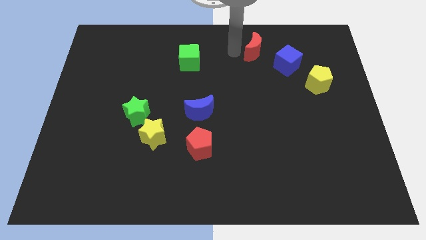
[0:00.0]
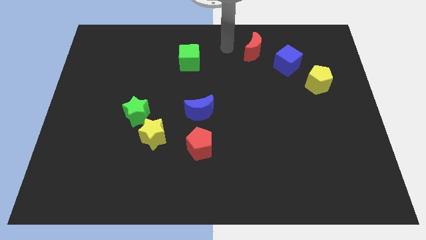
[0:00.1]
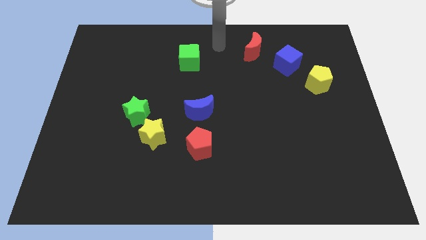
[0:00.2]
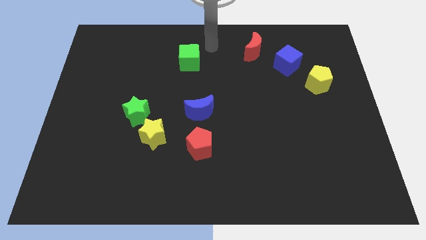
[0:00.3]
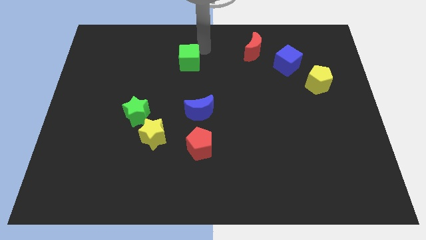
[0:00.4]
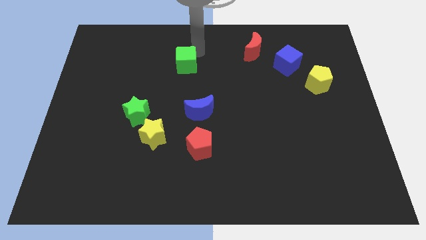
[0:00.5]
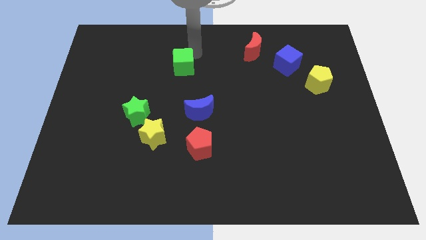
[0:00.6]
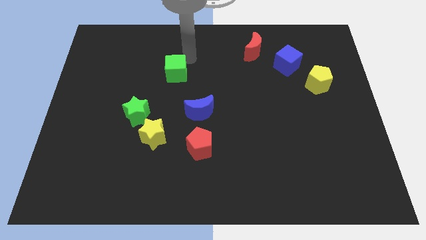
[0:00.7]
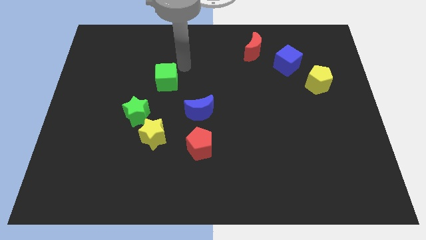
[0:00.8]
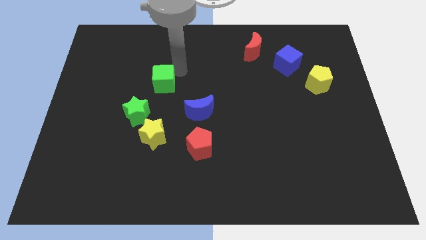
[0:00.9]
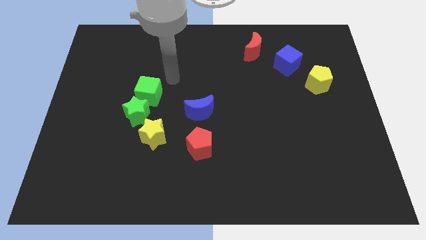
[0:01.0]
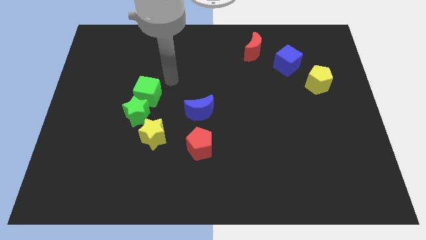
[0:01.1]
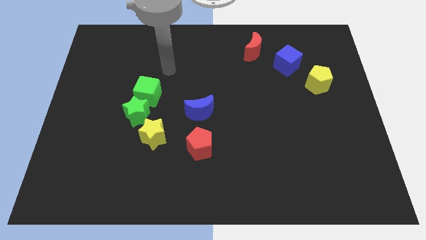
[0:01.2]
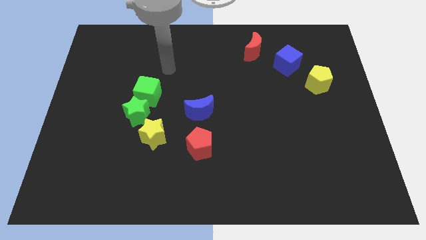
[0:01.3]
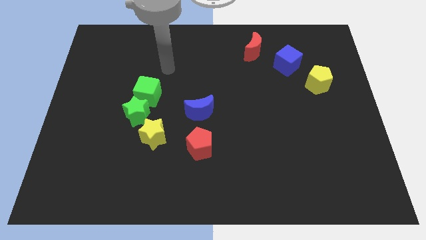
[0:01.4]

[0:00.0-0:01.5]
push the green cube into the green star

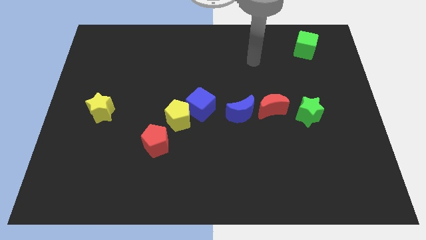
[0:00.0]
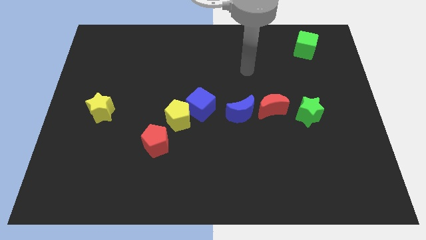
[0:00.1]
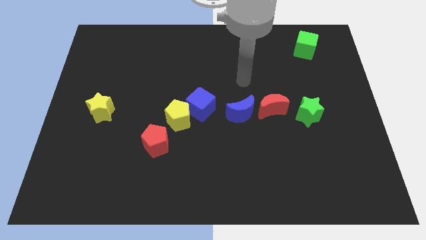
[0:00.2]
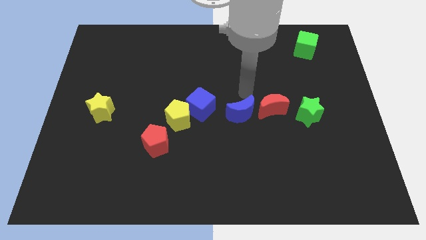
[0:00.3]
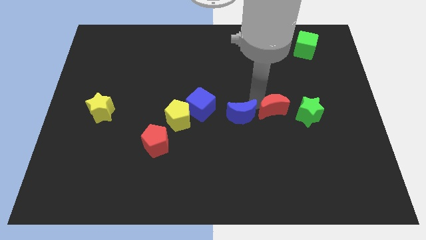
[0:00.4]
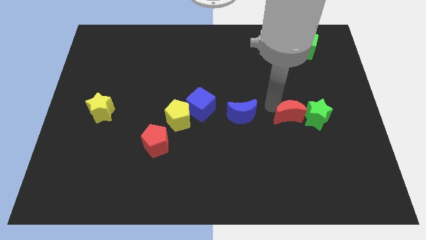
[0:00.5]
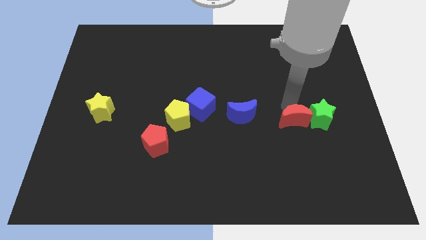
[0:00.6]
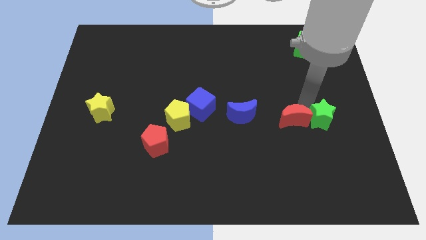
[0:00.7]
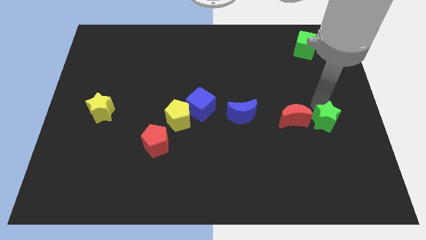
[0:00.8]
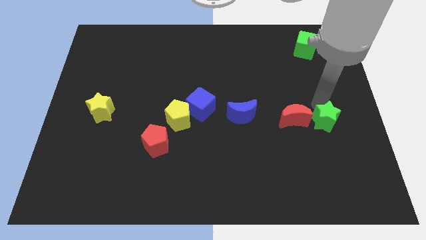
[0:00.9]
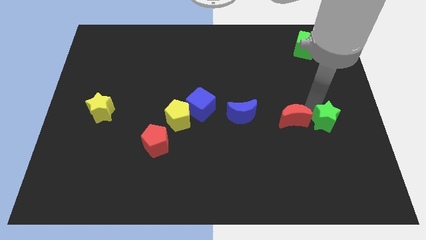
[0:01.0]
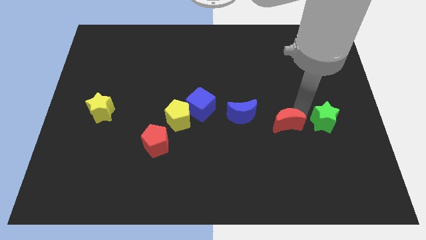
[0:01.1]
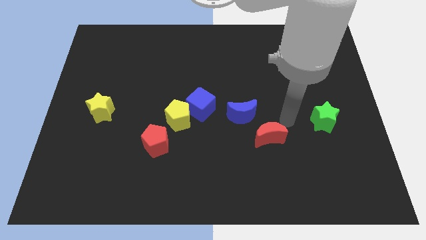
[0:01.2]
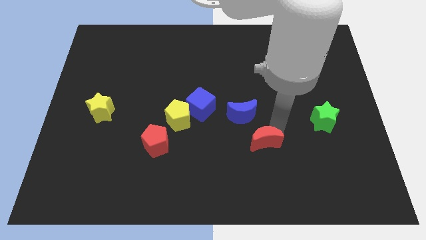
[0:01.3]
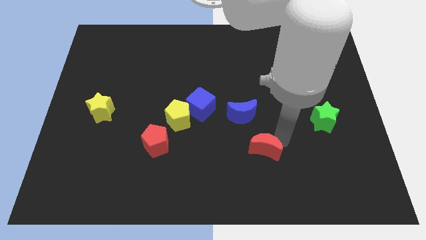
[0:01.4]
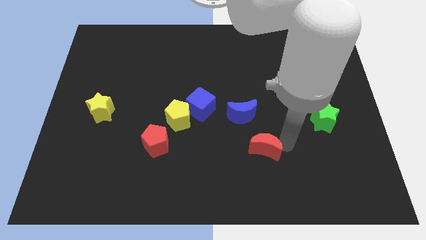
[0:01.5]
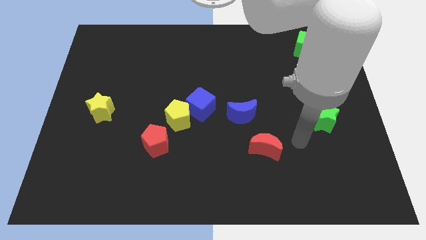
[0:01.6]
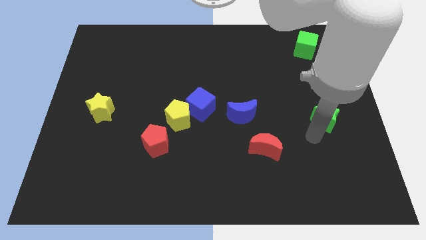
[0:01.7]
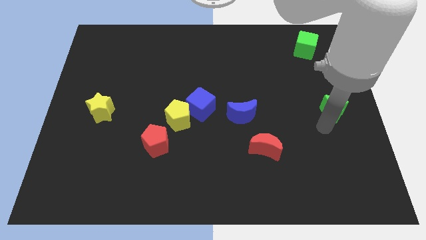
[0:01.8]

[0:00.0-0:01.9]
separate the red moon and green star

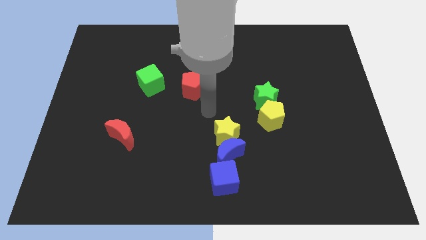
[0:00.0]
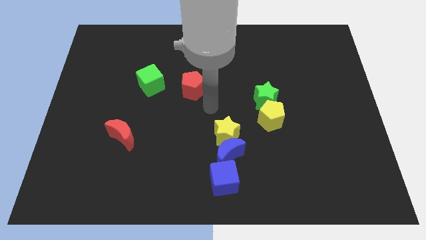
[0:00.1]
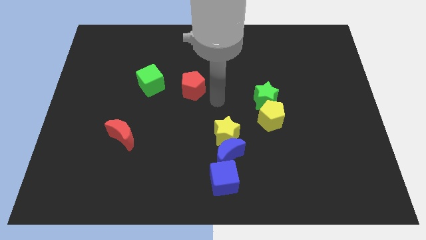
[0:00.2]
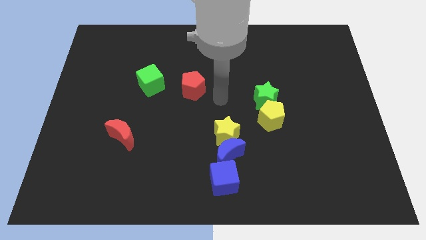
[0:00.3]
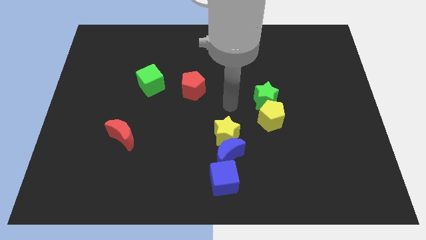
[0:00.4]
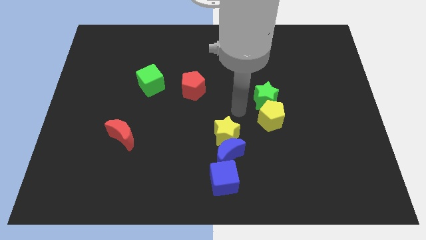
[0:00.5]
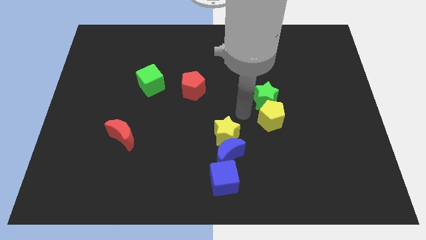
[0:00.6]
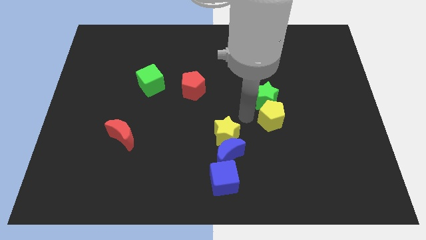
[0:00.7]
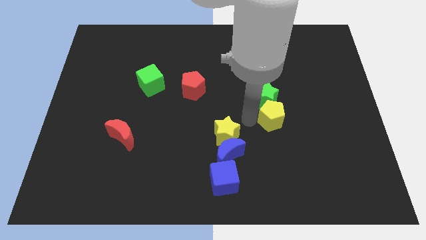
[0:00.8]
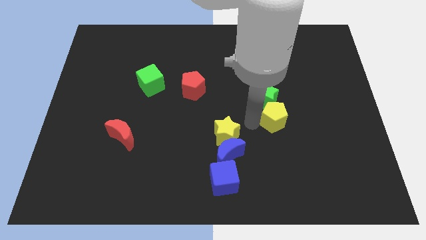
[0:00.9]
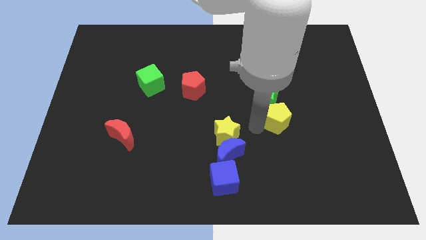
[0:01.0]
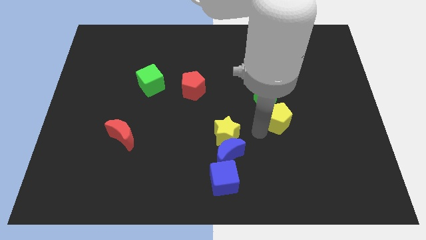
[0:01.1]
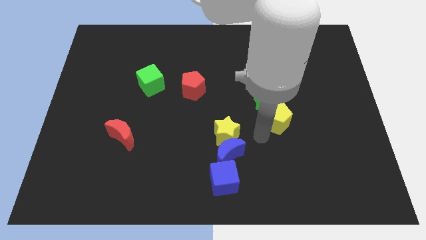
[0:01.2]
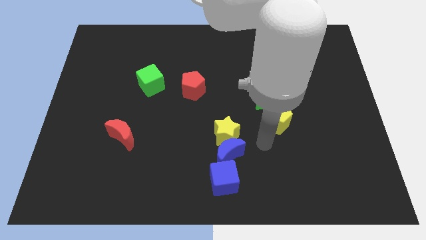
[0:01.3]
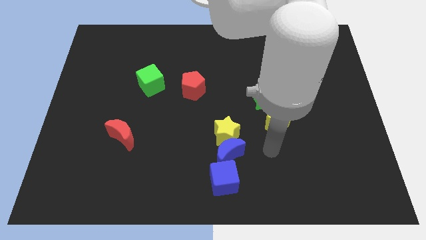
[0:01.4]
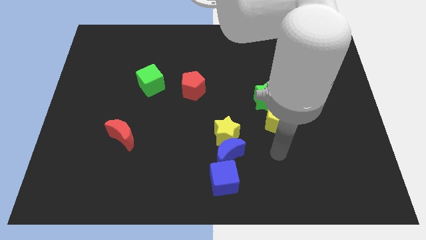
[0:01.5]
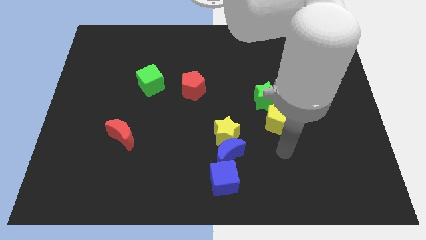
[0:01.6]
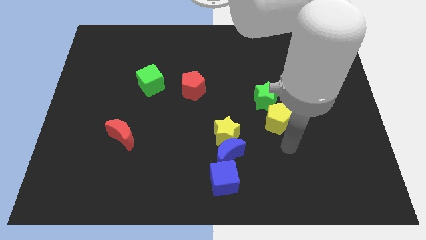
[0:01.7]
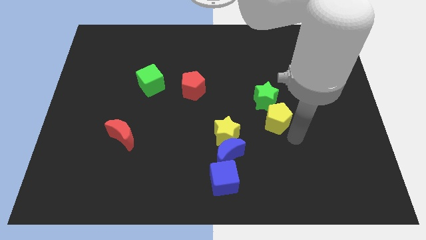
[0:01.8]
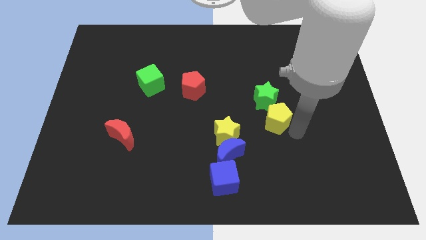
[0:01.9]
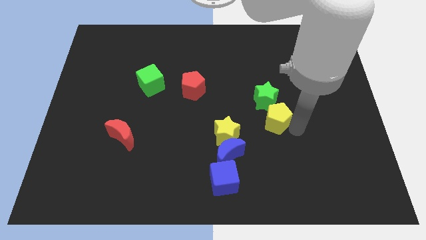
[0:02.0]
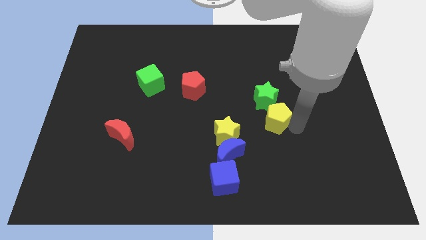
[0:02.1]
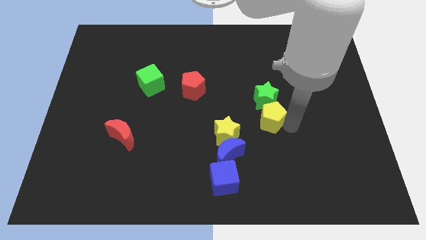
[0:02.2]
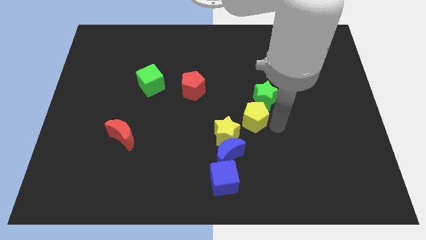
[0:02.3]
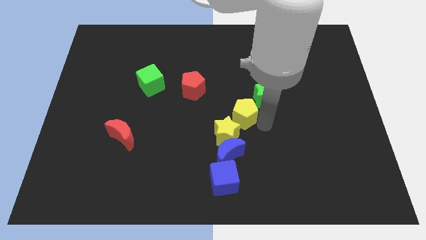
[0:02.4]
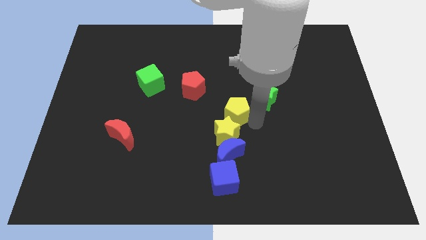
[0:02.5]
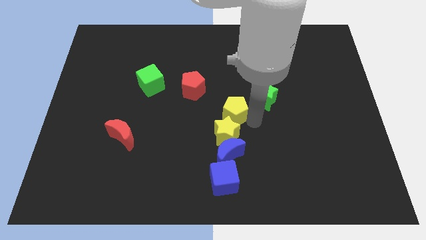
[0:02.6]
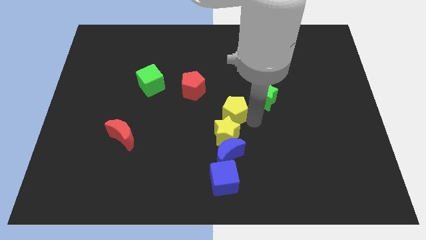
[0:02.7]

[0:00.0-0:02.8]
move the yellow pentagon to the top of the yellow star

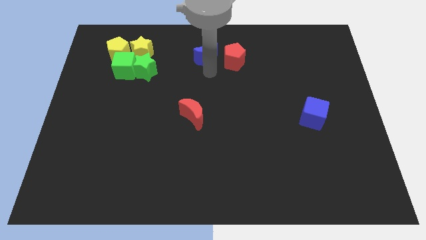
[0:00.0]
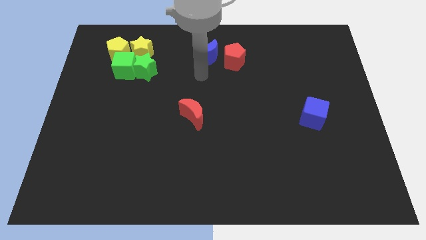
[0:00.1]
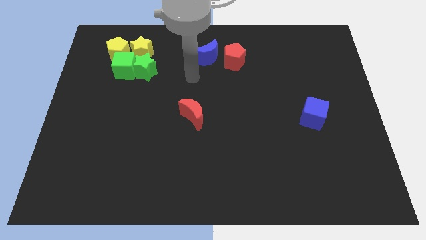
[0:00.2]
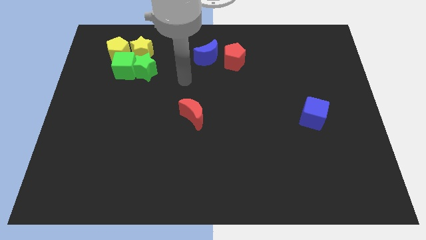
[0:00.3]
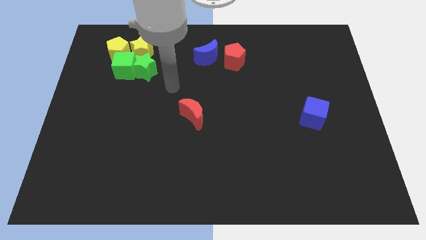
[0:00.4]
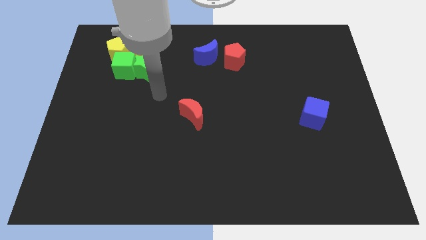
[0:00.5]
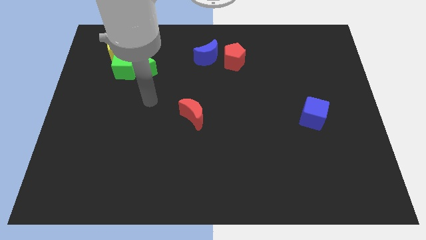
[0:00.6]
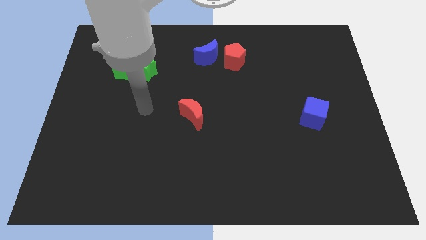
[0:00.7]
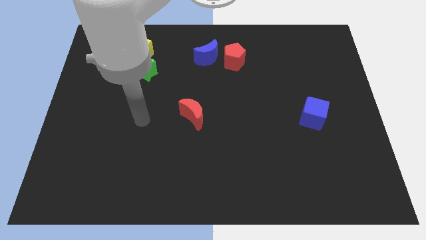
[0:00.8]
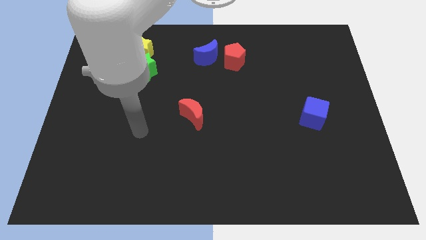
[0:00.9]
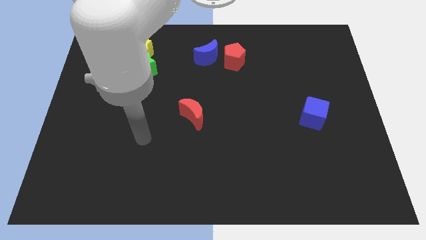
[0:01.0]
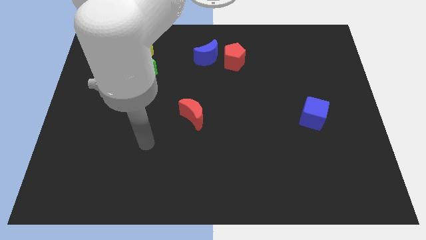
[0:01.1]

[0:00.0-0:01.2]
move your arm away from the blue moon

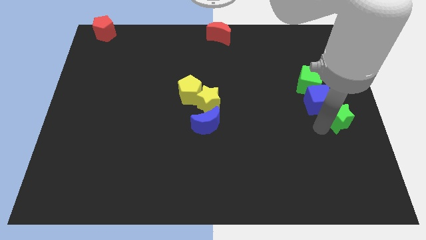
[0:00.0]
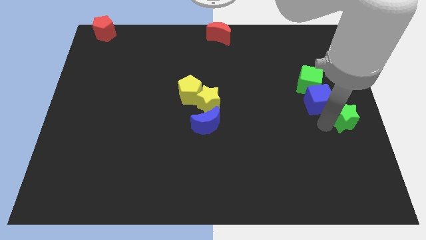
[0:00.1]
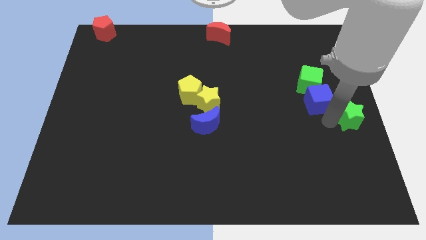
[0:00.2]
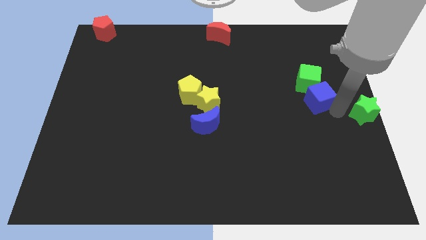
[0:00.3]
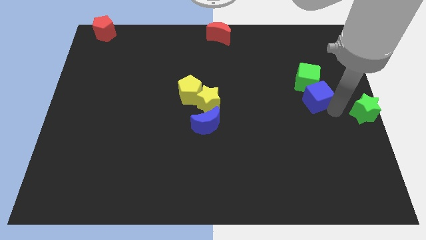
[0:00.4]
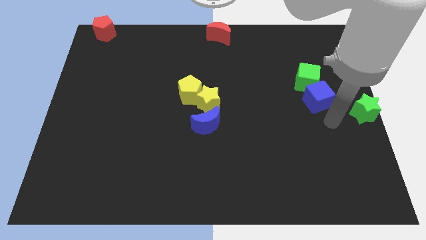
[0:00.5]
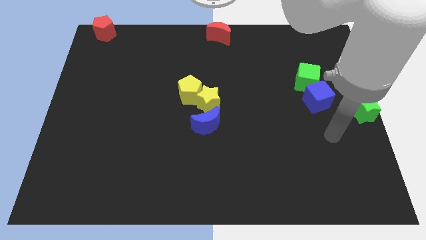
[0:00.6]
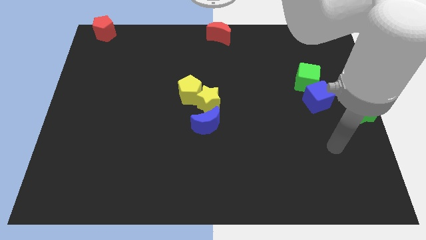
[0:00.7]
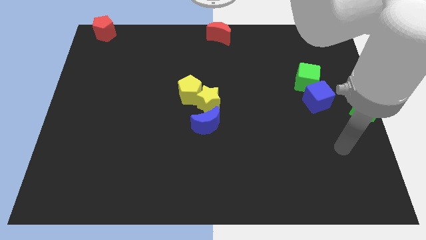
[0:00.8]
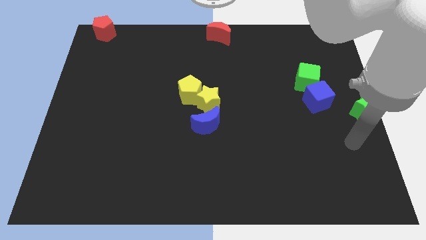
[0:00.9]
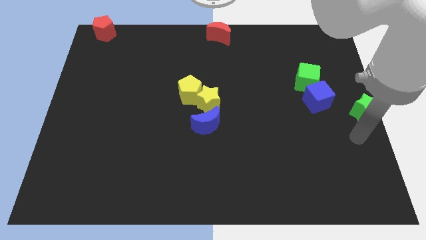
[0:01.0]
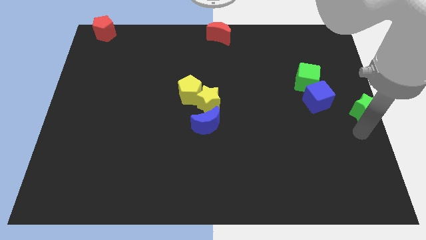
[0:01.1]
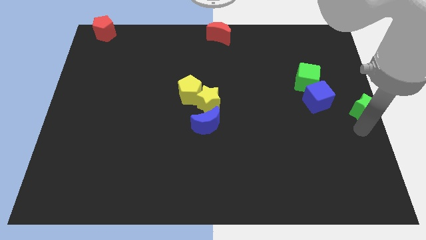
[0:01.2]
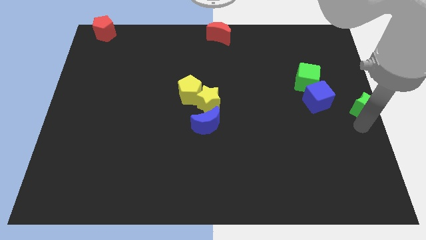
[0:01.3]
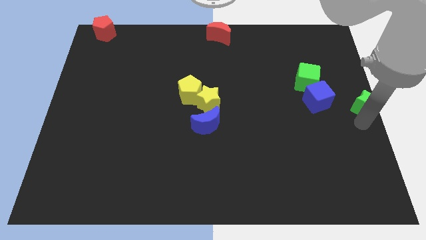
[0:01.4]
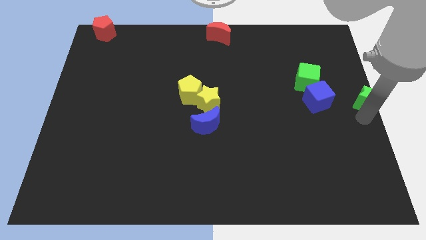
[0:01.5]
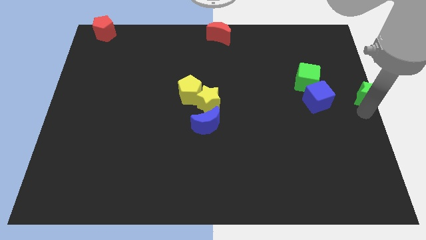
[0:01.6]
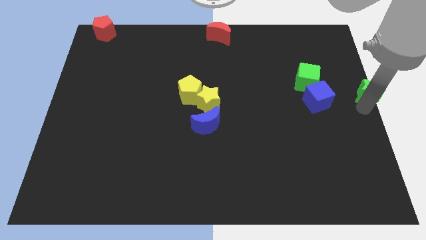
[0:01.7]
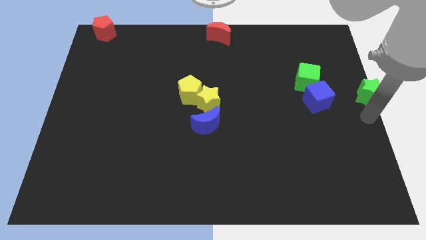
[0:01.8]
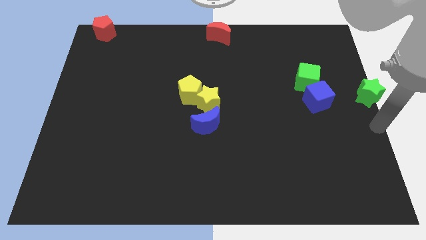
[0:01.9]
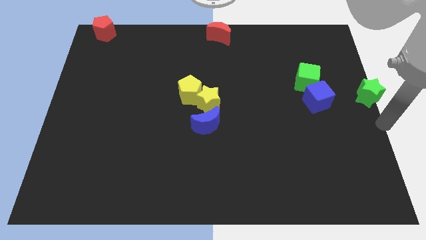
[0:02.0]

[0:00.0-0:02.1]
push green star to the right of blue cube
